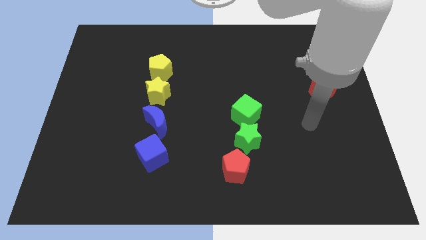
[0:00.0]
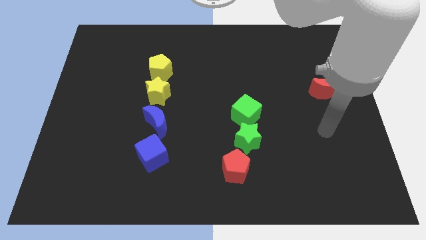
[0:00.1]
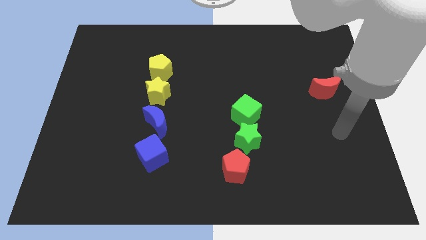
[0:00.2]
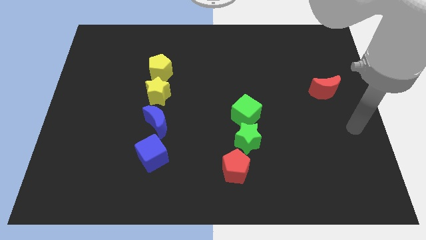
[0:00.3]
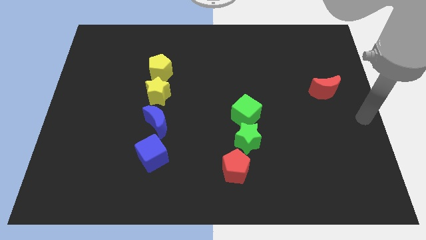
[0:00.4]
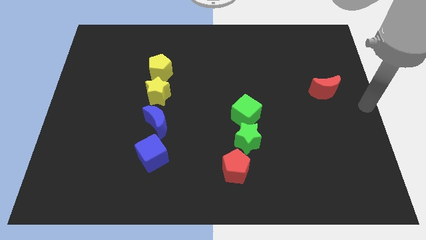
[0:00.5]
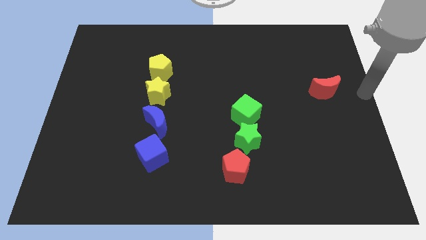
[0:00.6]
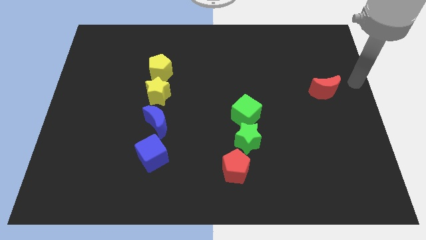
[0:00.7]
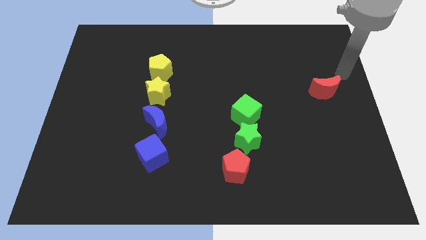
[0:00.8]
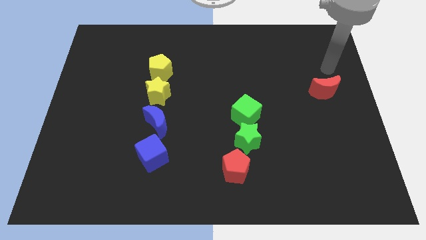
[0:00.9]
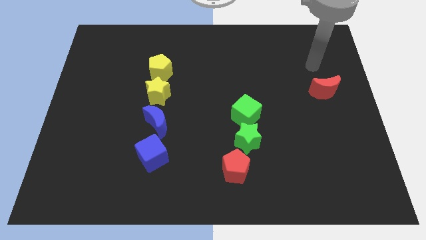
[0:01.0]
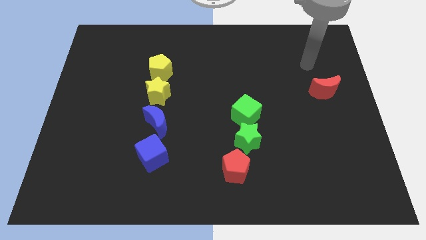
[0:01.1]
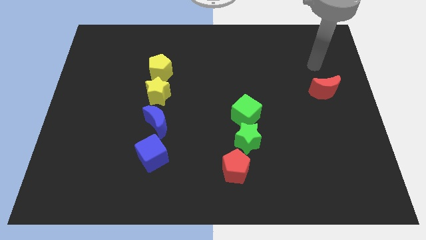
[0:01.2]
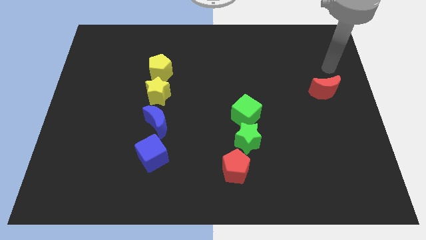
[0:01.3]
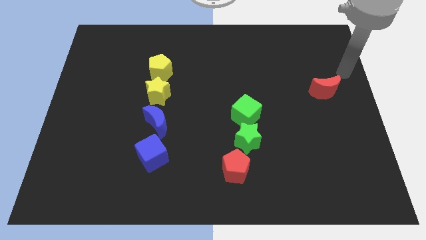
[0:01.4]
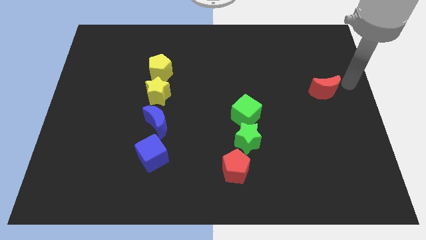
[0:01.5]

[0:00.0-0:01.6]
move your arm to the right center of the board

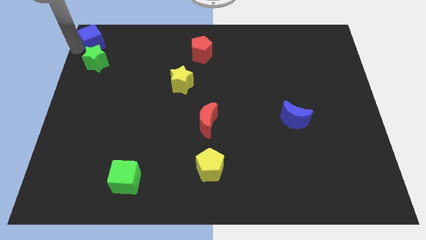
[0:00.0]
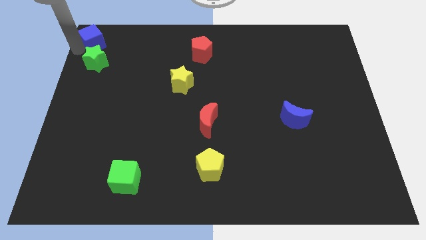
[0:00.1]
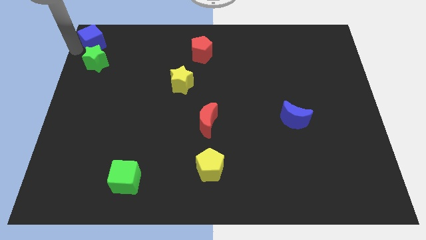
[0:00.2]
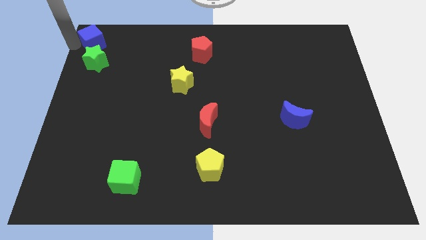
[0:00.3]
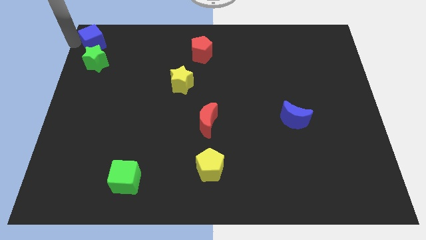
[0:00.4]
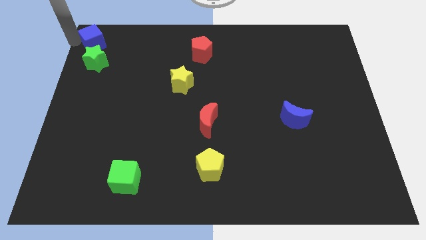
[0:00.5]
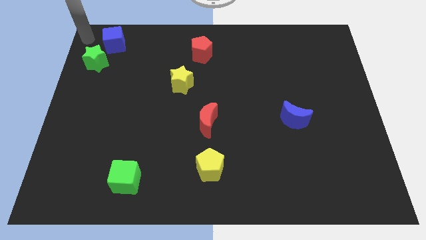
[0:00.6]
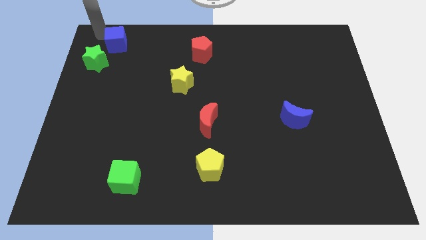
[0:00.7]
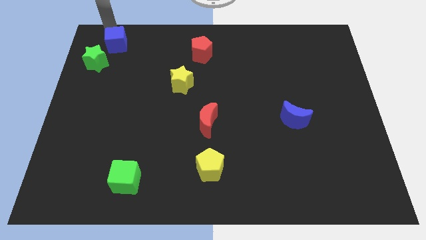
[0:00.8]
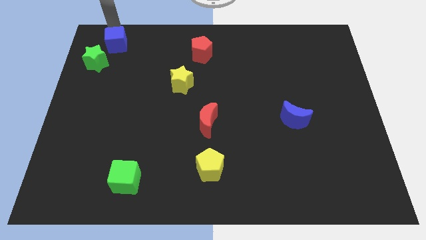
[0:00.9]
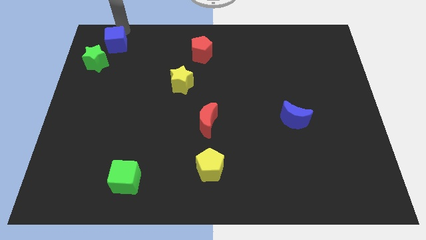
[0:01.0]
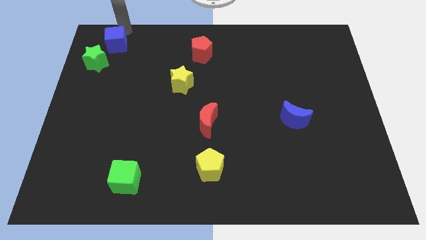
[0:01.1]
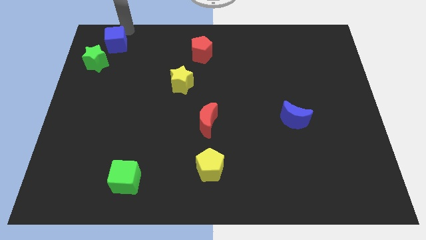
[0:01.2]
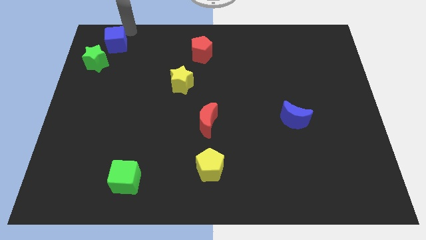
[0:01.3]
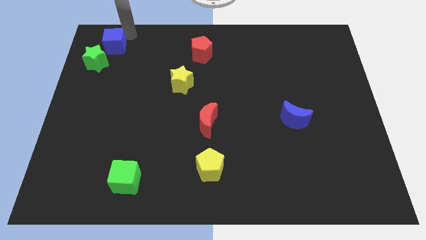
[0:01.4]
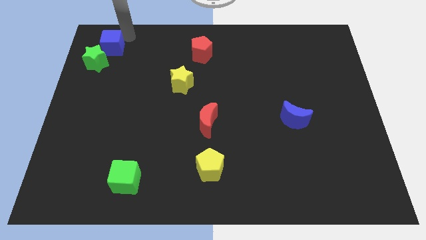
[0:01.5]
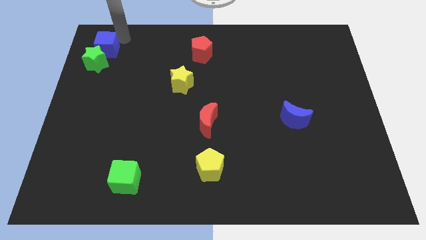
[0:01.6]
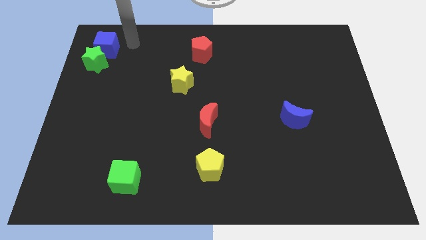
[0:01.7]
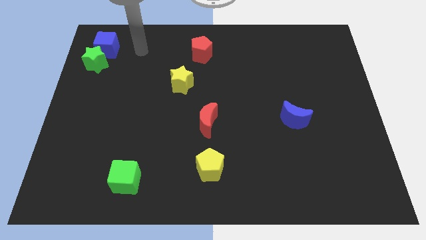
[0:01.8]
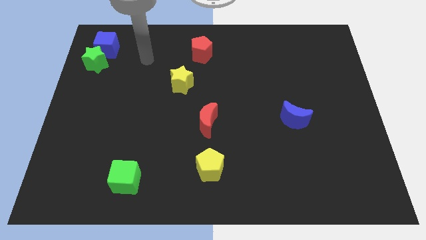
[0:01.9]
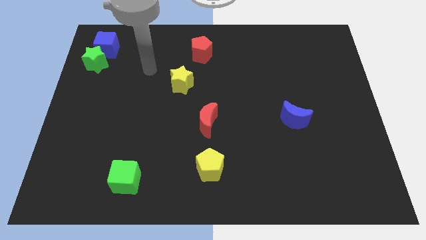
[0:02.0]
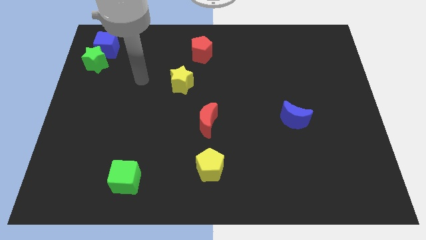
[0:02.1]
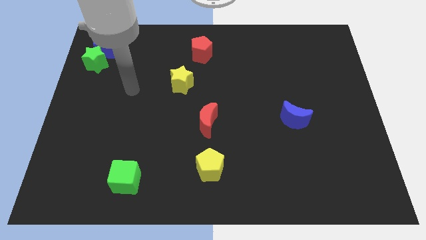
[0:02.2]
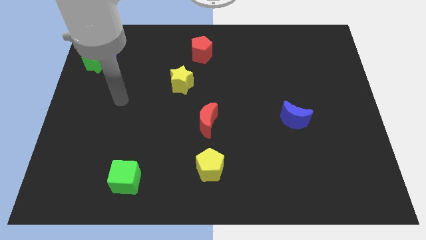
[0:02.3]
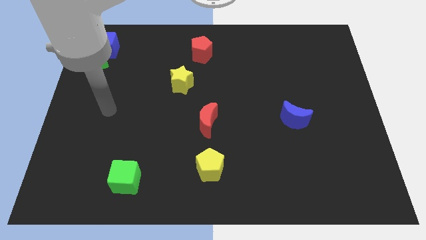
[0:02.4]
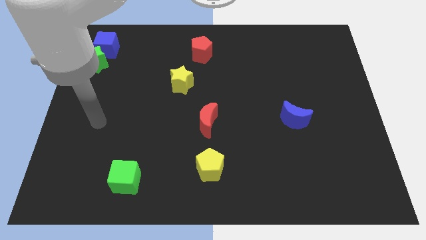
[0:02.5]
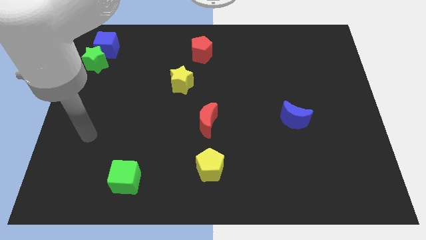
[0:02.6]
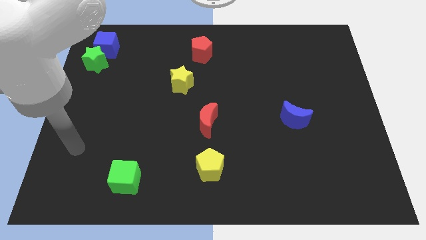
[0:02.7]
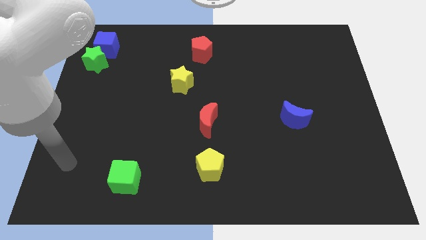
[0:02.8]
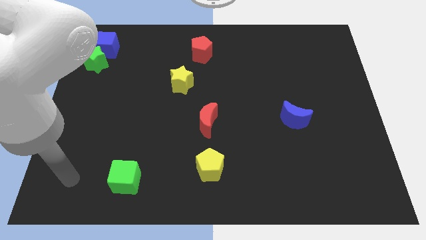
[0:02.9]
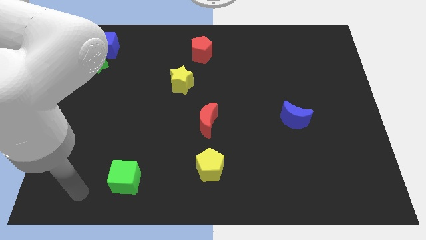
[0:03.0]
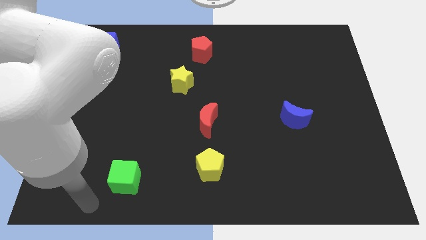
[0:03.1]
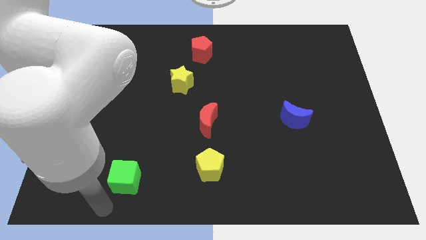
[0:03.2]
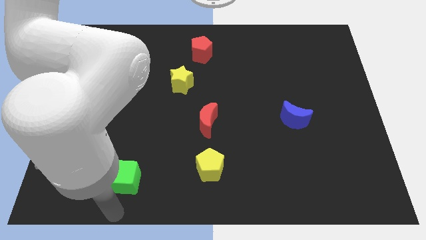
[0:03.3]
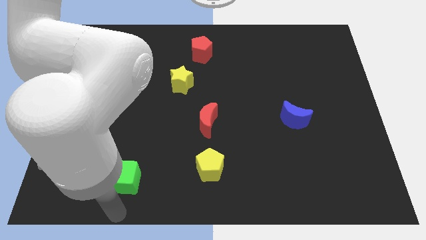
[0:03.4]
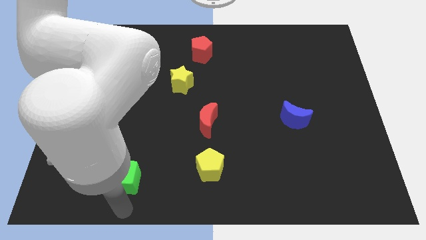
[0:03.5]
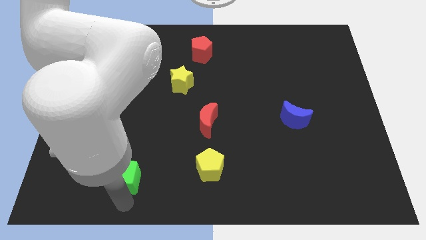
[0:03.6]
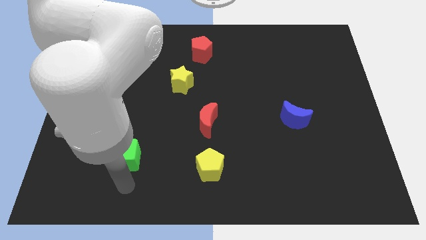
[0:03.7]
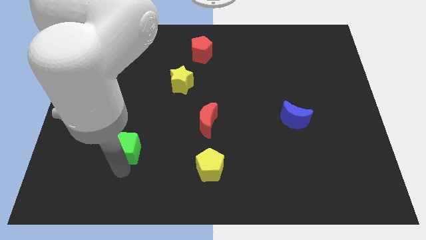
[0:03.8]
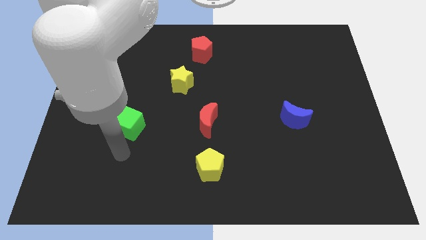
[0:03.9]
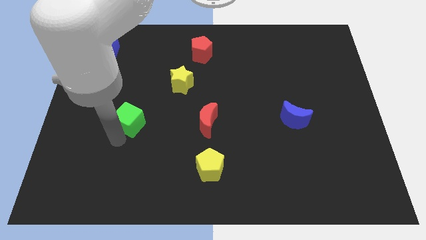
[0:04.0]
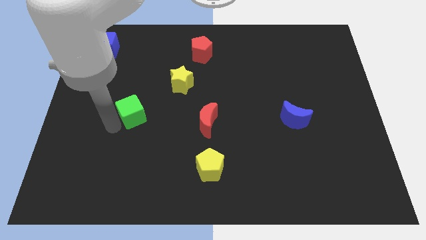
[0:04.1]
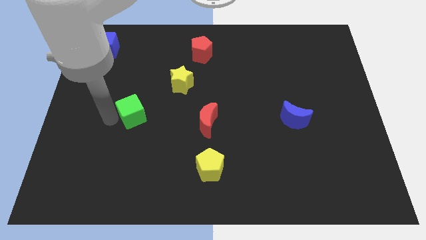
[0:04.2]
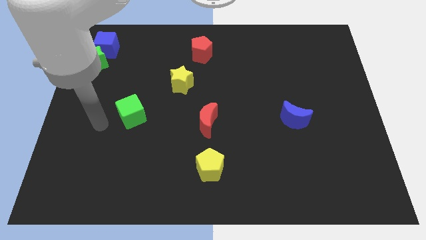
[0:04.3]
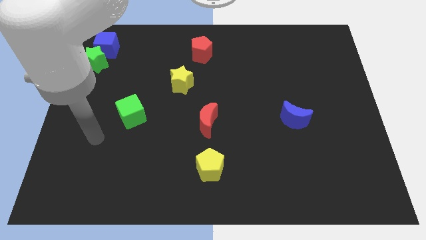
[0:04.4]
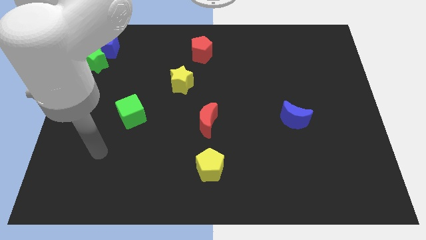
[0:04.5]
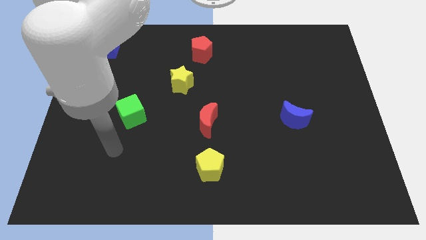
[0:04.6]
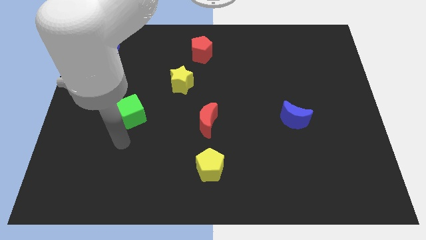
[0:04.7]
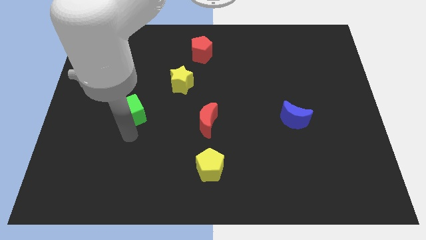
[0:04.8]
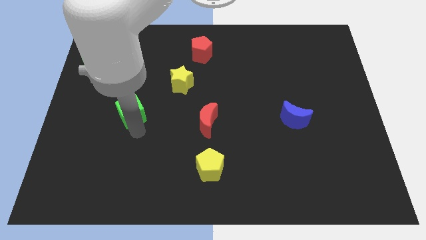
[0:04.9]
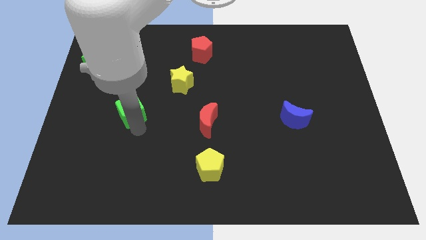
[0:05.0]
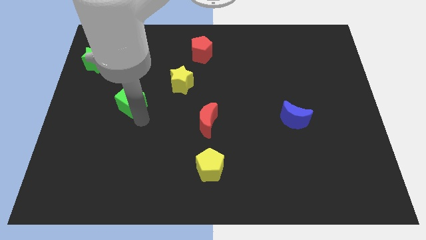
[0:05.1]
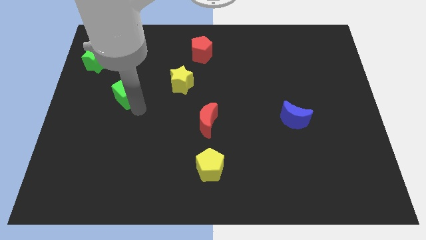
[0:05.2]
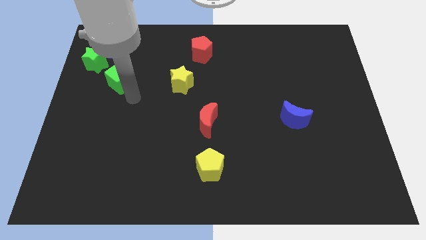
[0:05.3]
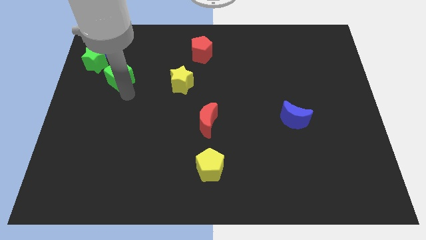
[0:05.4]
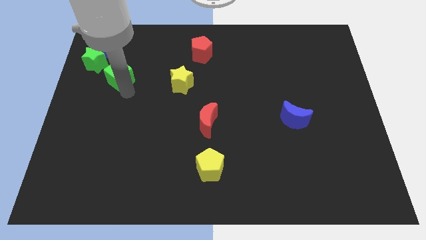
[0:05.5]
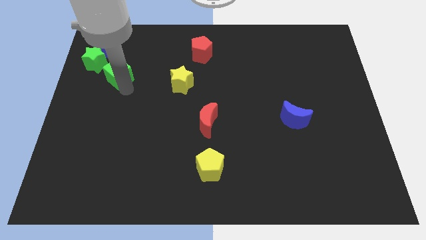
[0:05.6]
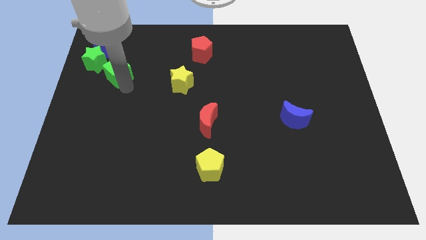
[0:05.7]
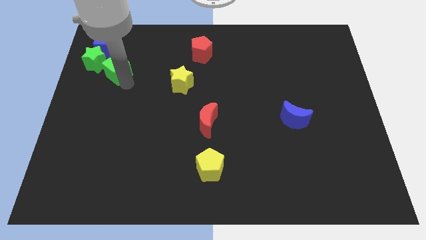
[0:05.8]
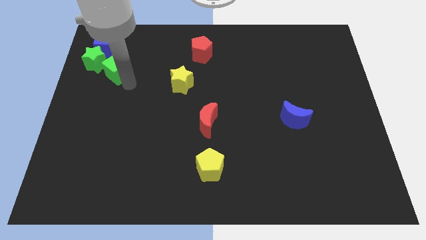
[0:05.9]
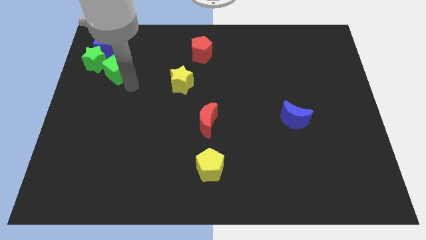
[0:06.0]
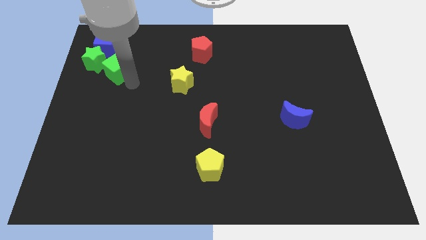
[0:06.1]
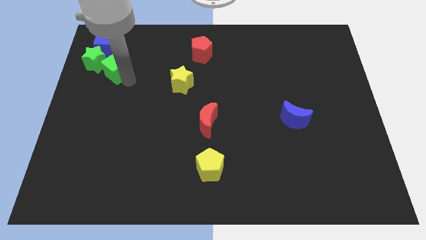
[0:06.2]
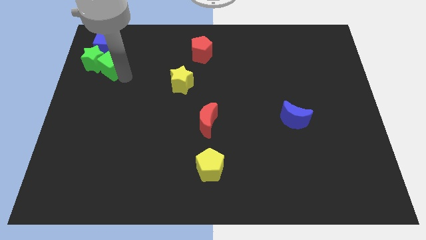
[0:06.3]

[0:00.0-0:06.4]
place the green cube to the right of the green star

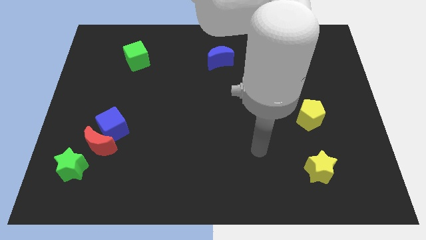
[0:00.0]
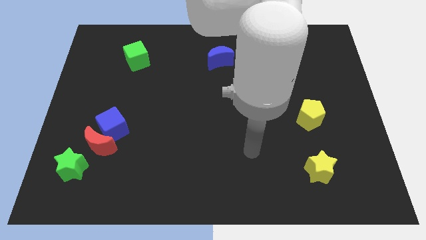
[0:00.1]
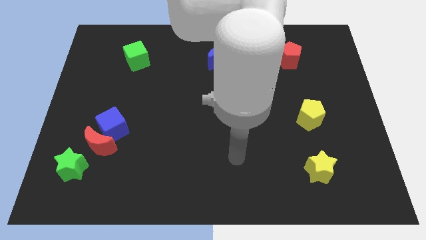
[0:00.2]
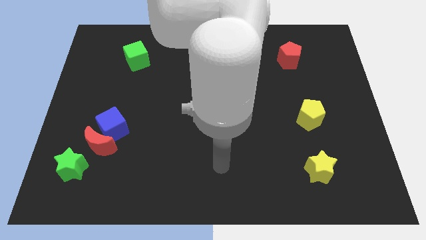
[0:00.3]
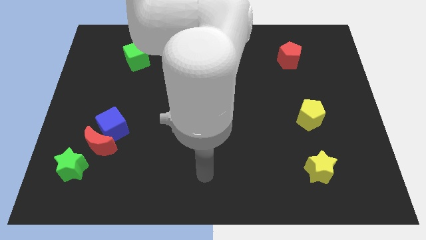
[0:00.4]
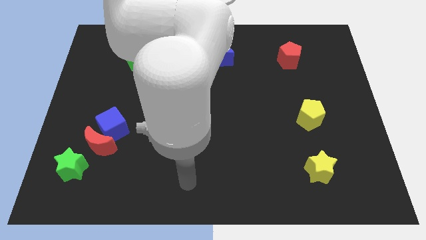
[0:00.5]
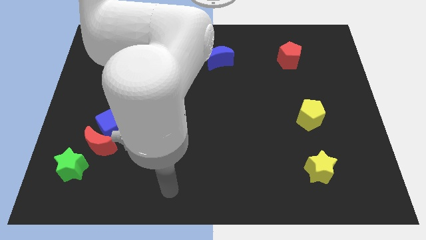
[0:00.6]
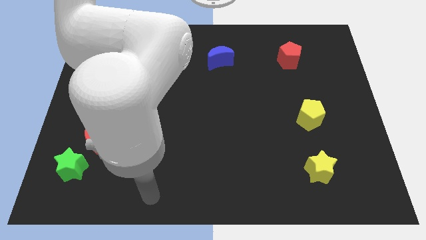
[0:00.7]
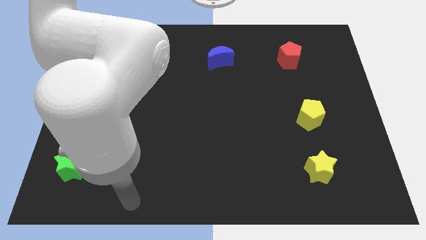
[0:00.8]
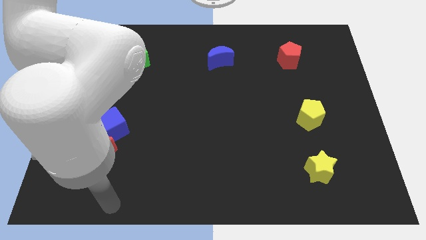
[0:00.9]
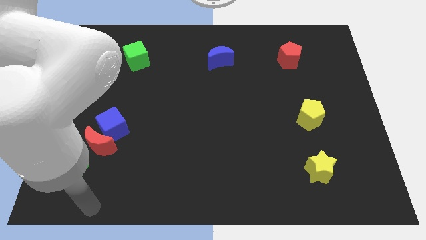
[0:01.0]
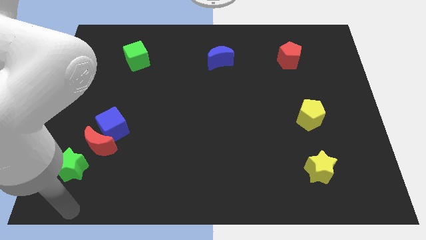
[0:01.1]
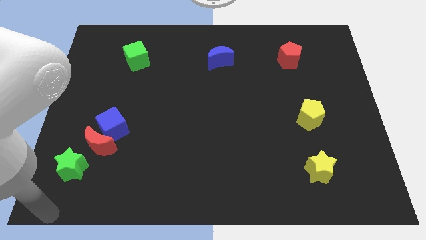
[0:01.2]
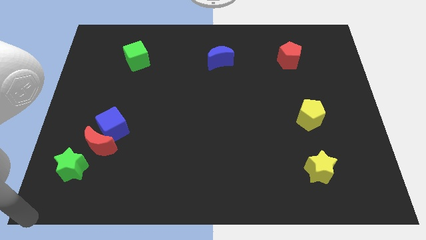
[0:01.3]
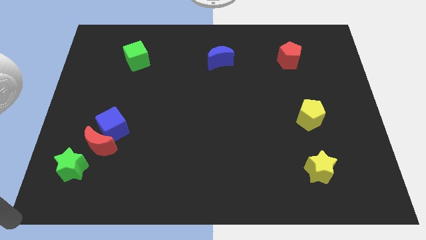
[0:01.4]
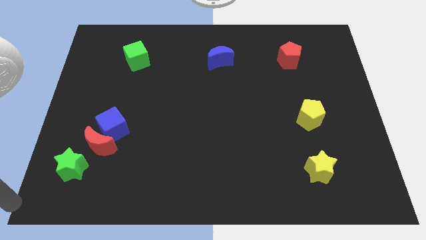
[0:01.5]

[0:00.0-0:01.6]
move the arm to the bottom left
